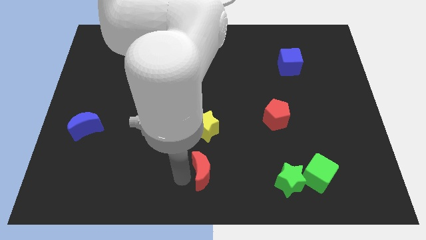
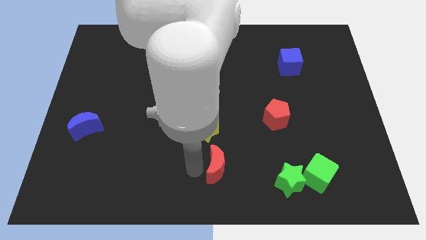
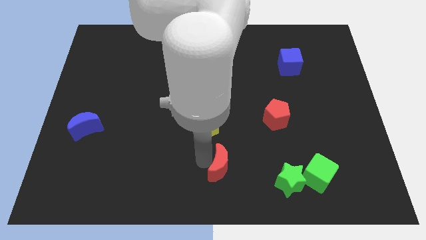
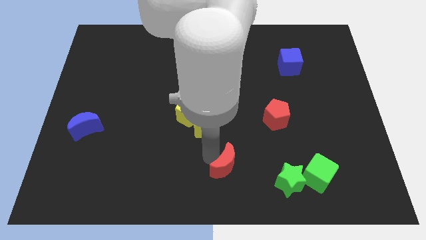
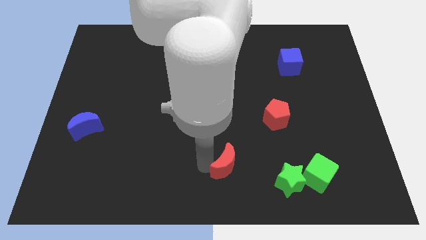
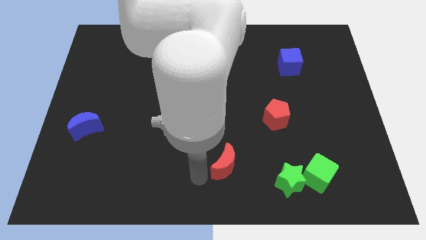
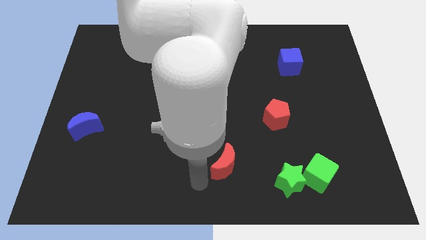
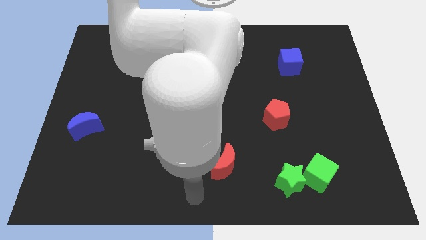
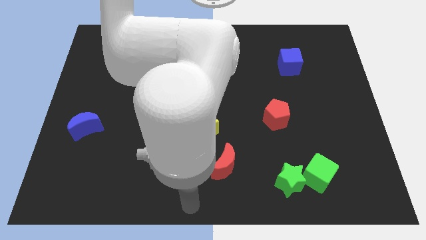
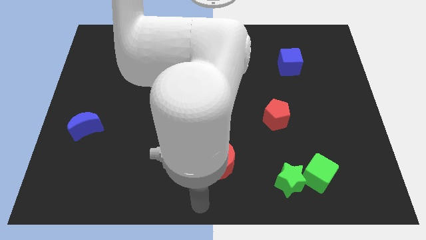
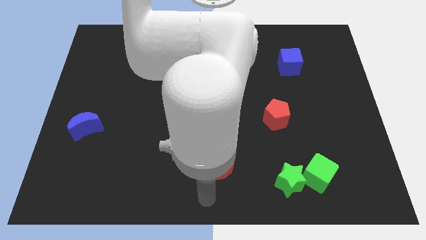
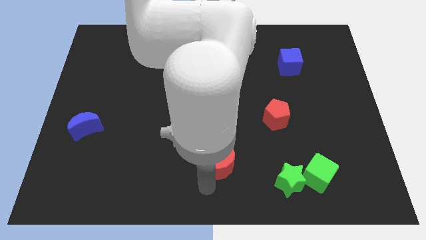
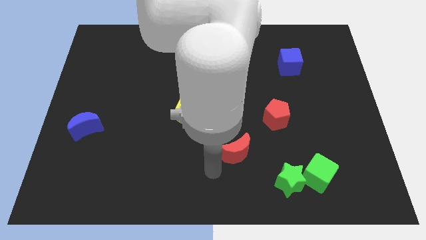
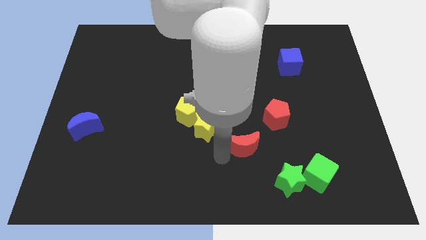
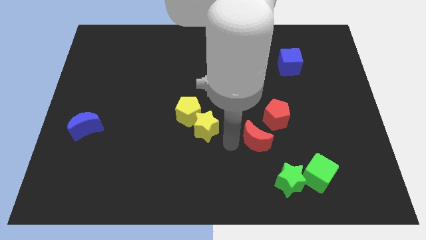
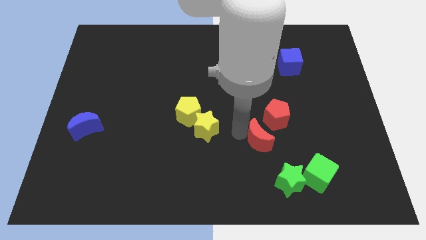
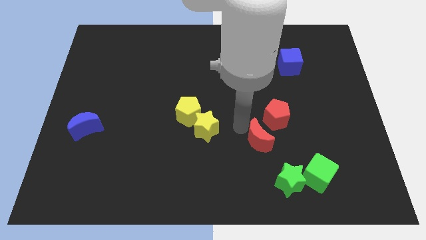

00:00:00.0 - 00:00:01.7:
move the red crescent towards the red pentagon

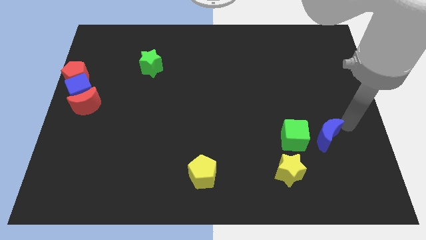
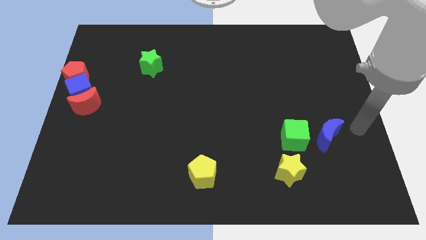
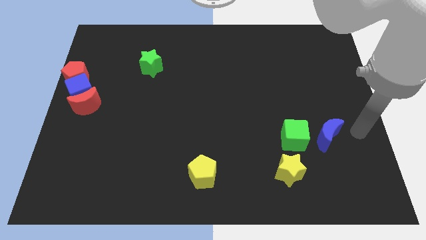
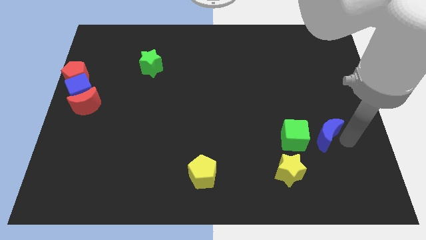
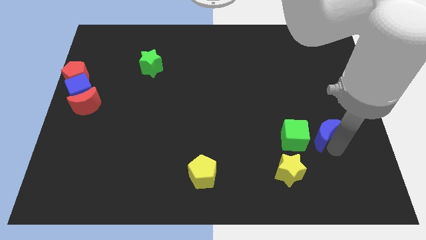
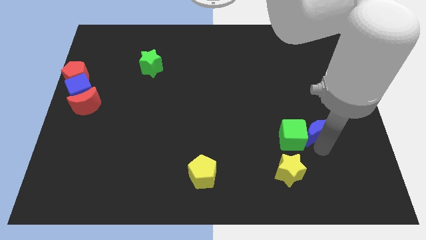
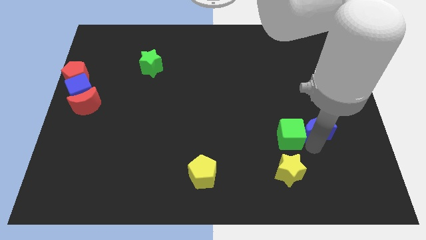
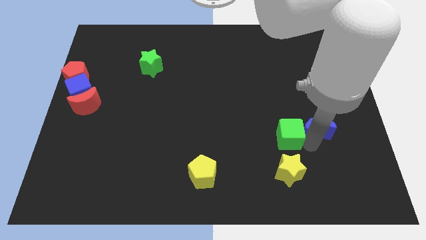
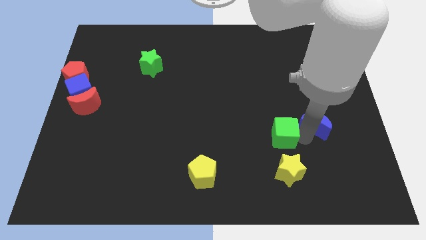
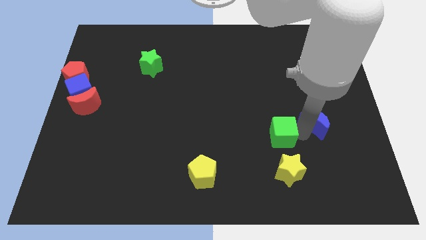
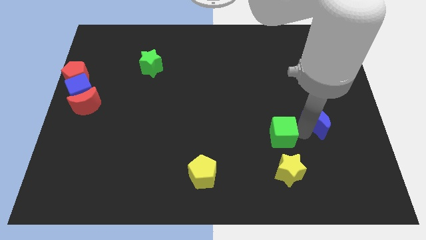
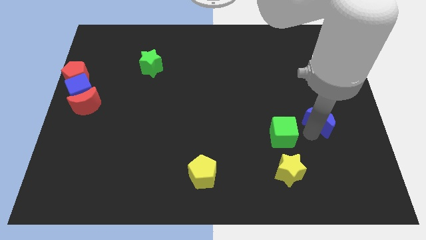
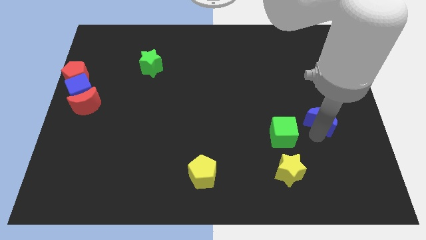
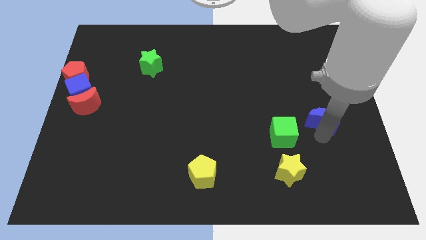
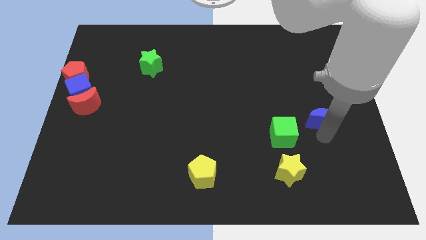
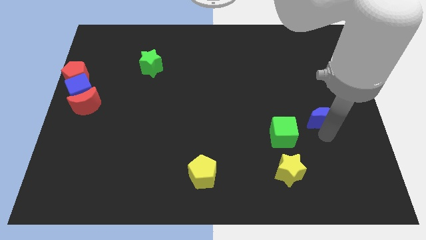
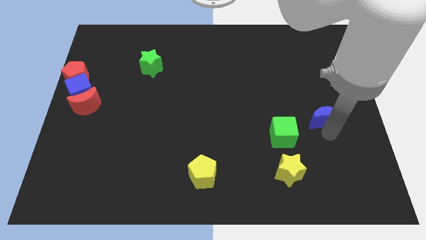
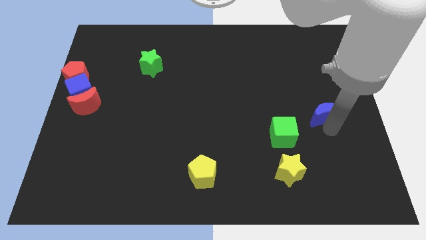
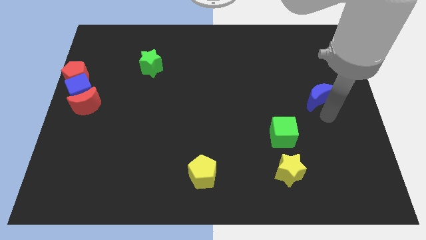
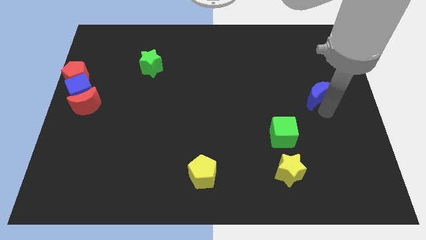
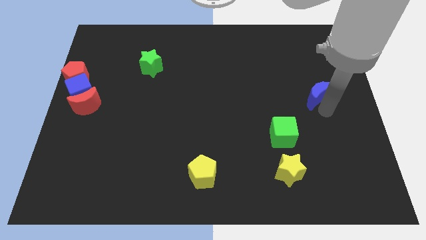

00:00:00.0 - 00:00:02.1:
push the blue crescent to the top right of the green cube

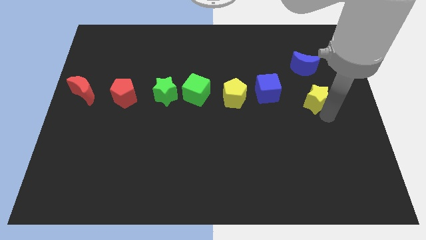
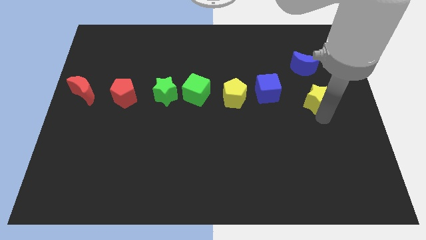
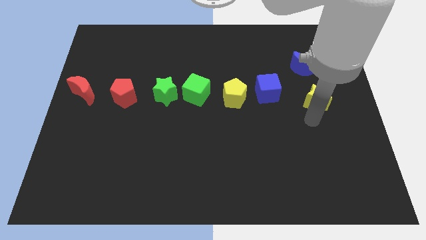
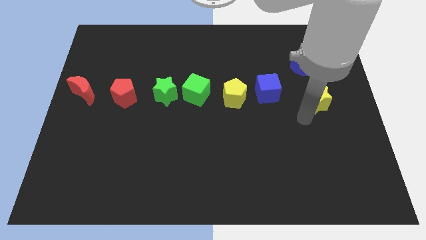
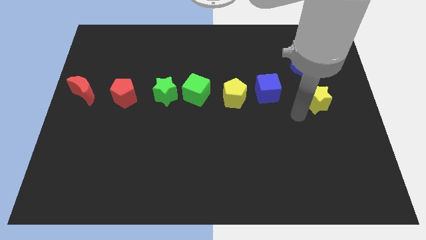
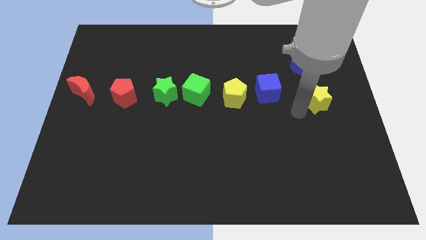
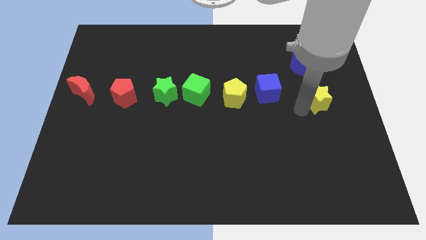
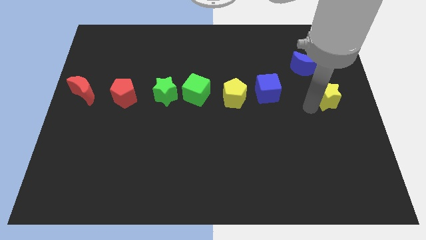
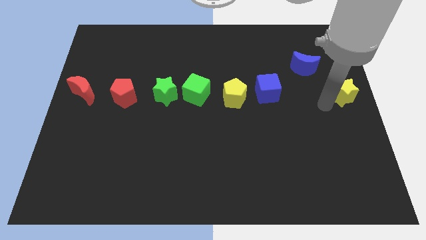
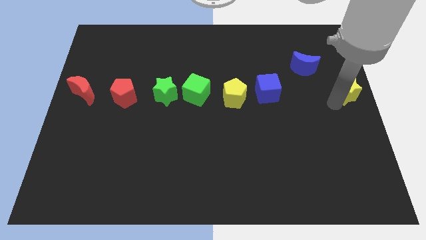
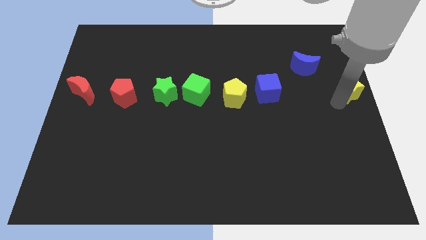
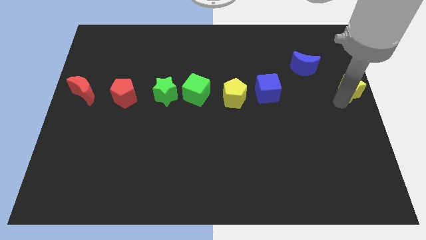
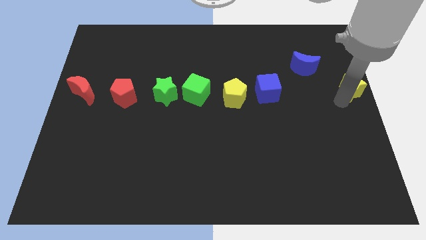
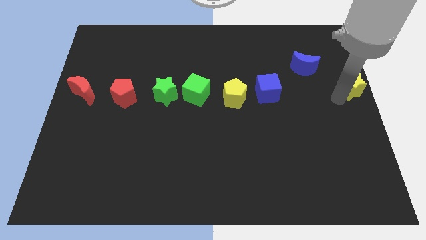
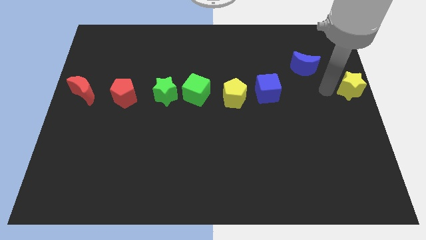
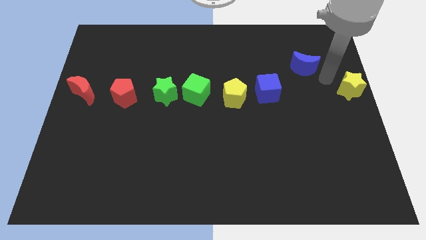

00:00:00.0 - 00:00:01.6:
push the yellow star to the center right

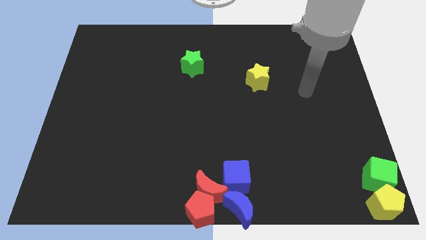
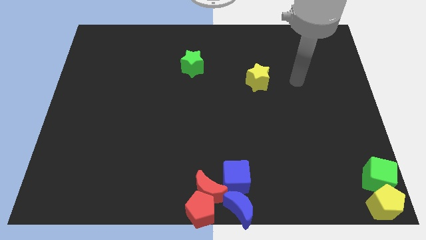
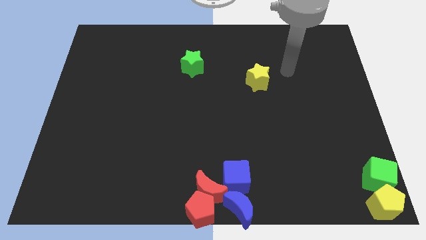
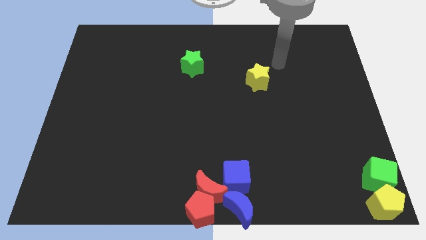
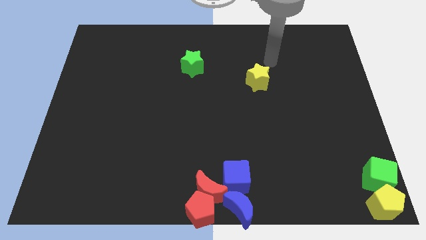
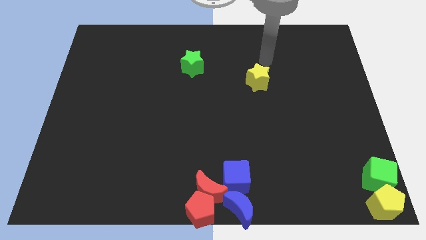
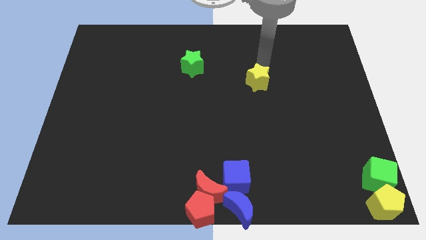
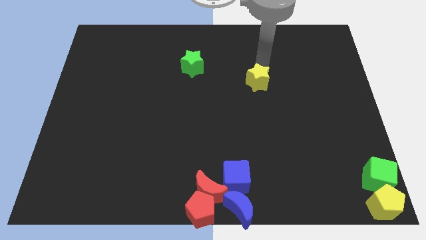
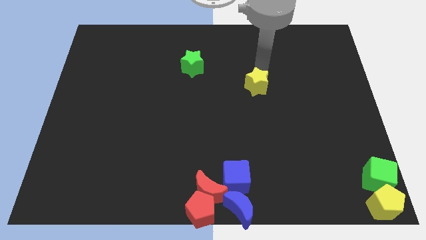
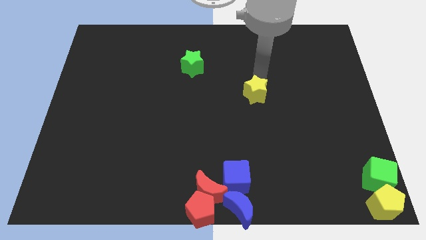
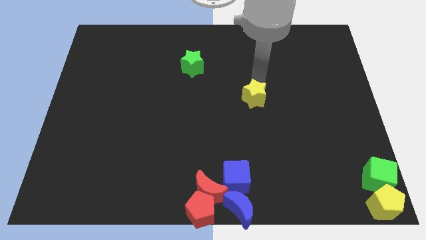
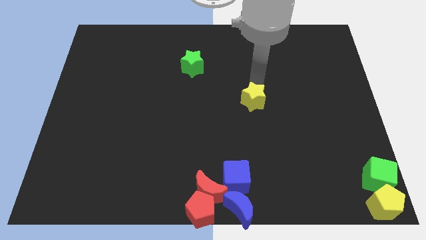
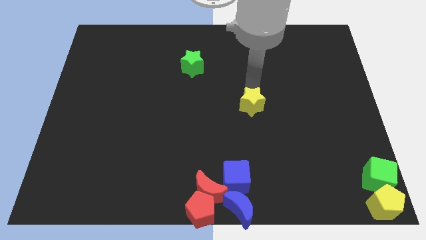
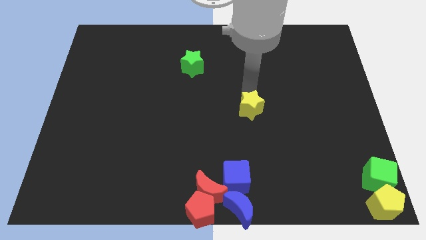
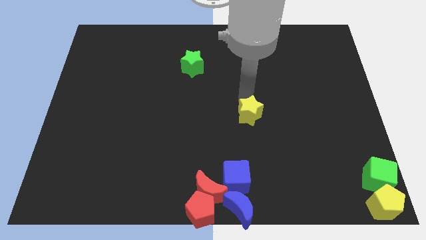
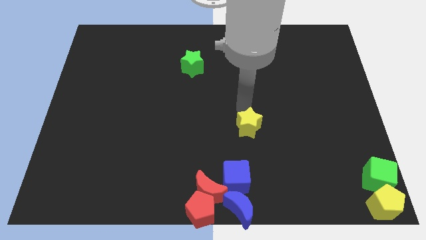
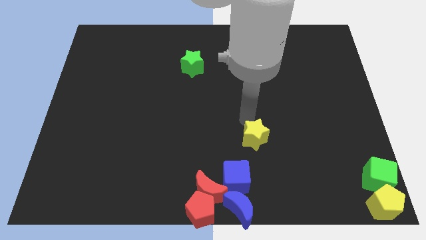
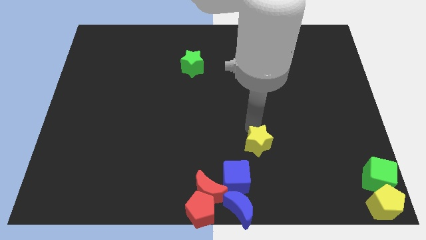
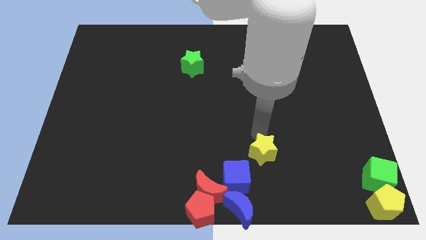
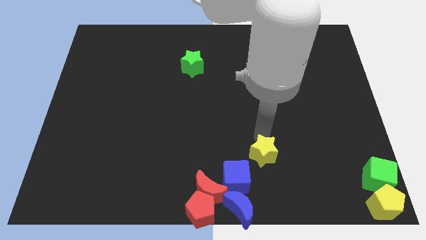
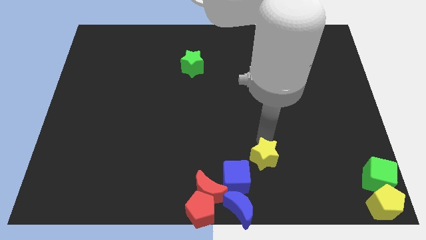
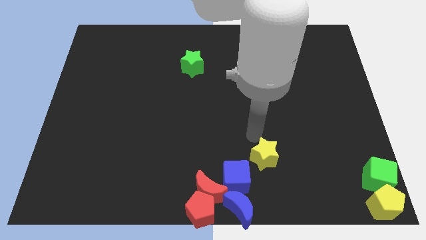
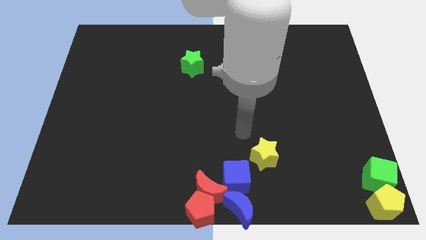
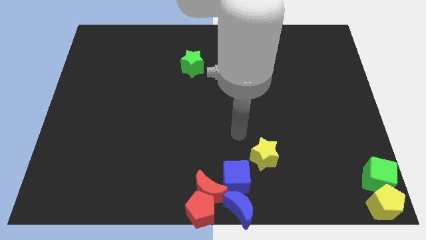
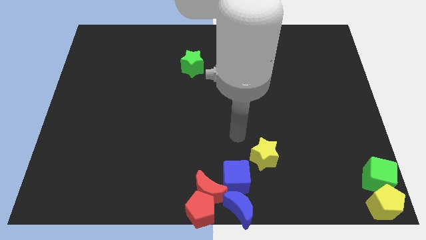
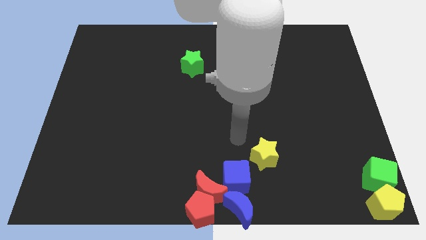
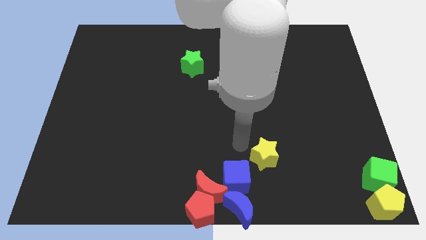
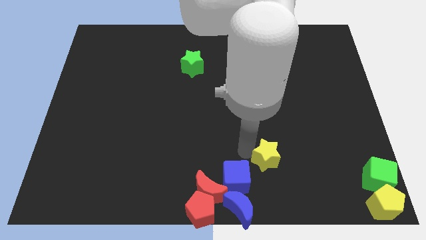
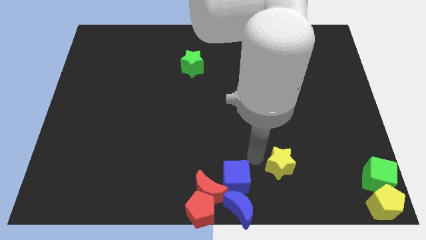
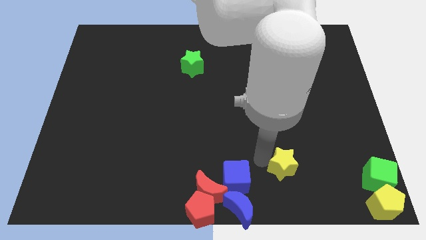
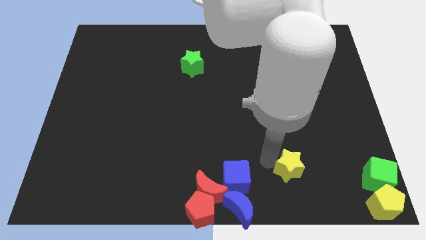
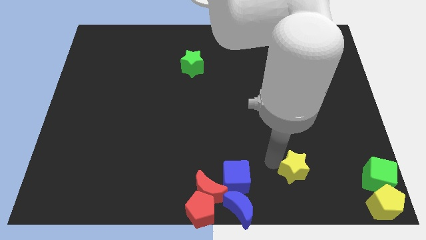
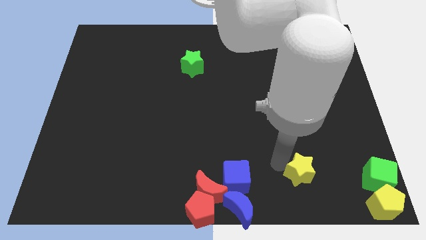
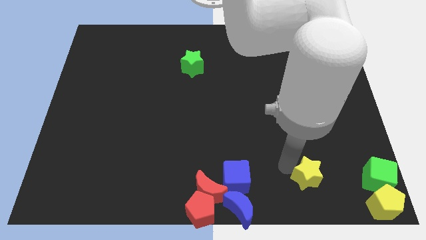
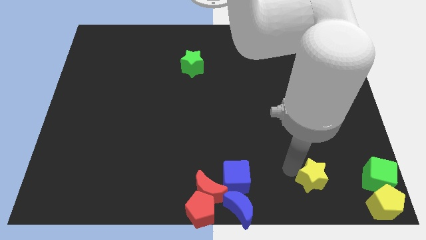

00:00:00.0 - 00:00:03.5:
place the yellow star between the blue cube and green cube
